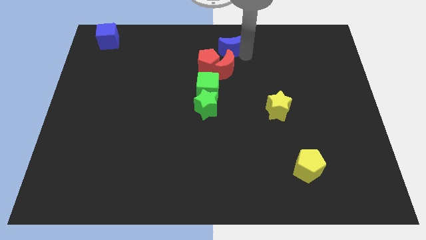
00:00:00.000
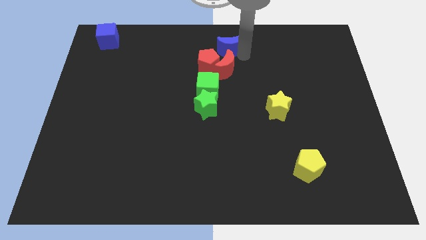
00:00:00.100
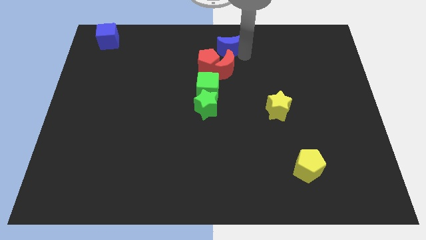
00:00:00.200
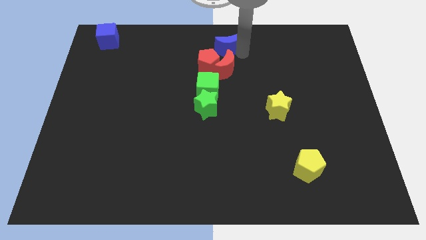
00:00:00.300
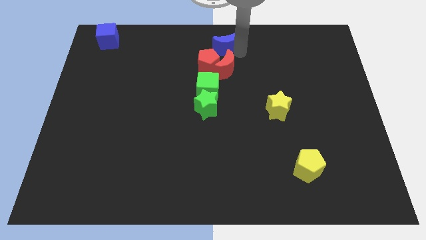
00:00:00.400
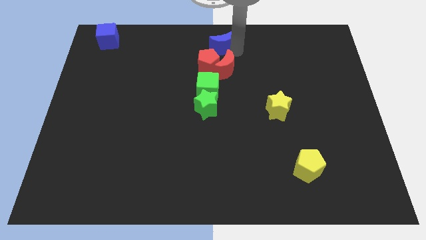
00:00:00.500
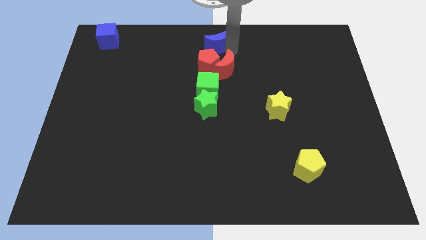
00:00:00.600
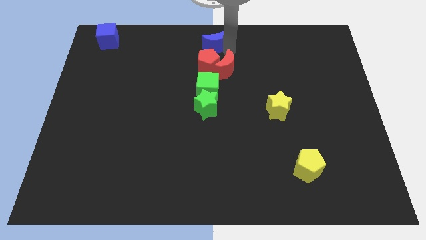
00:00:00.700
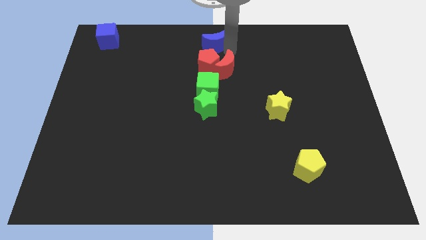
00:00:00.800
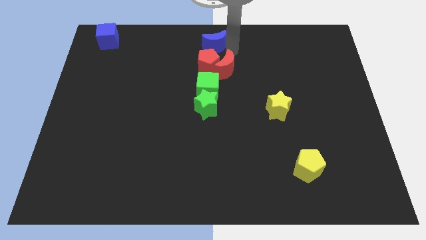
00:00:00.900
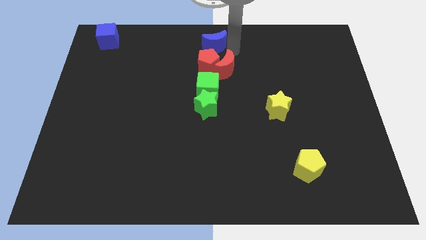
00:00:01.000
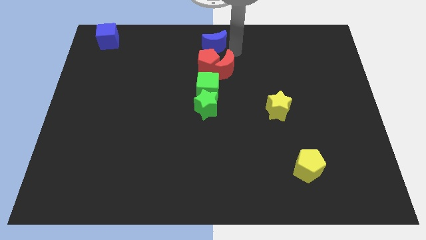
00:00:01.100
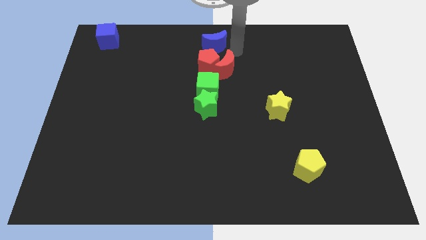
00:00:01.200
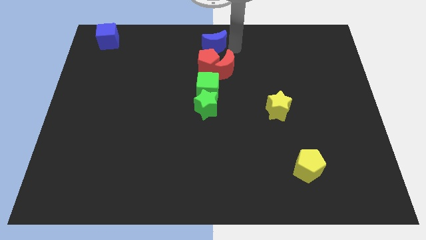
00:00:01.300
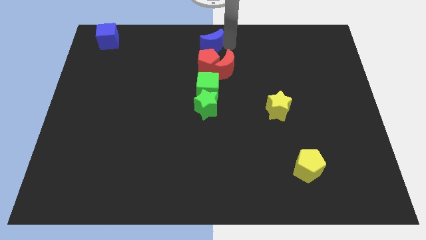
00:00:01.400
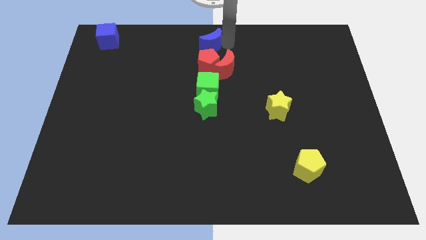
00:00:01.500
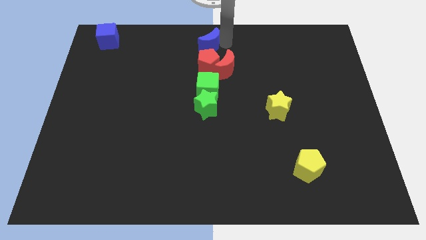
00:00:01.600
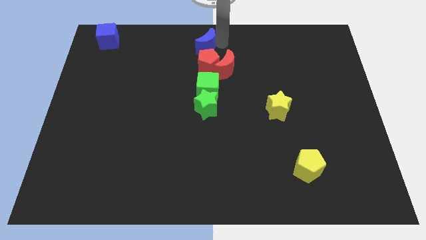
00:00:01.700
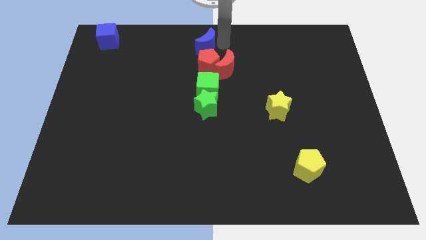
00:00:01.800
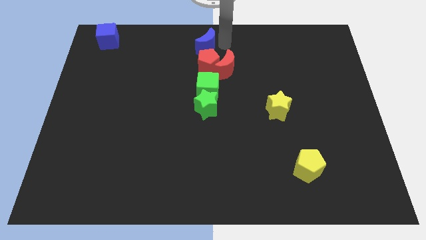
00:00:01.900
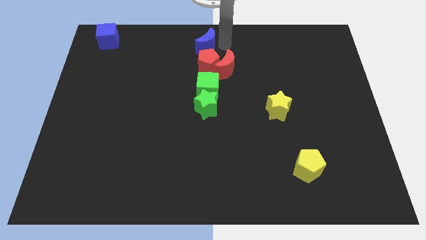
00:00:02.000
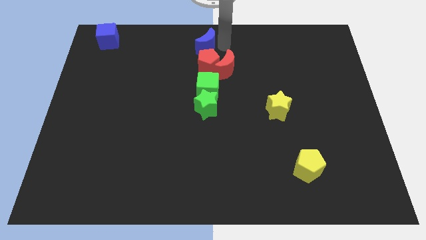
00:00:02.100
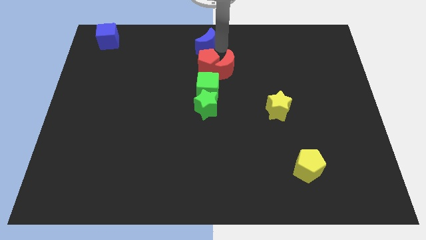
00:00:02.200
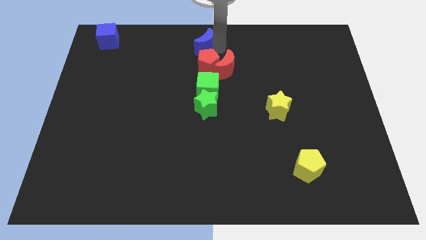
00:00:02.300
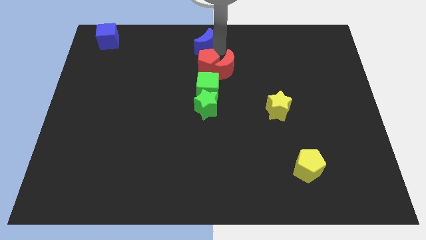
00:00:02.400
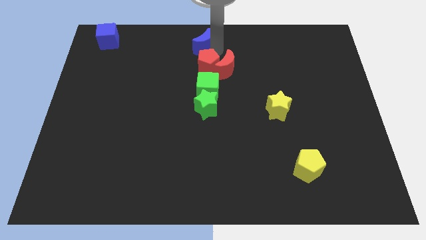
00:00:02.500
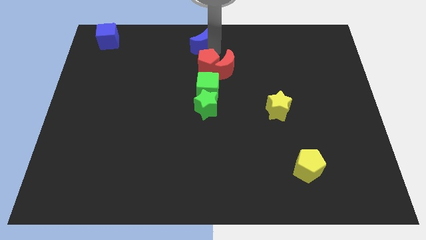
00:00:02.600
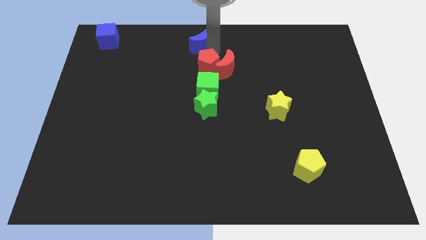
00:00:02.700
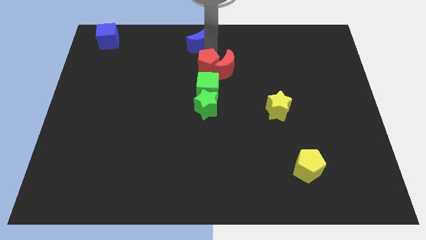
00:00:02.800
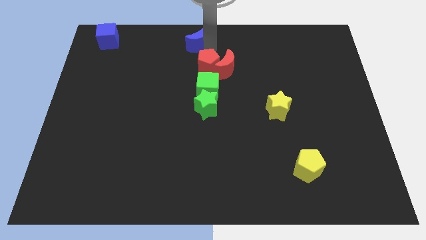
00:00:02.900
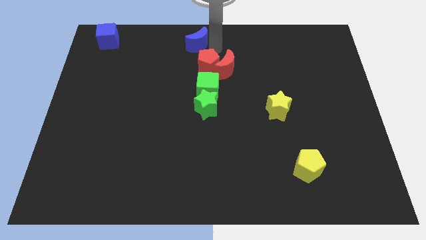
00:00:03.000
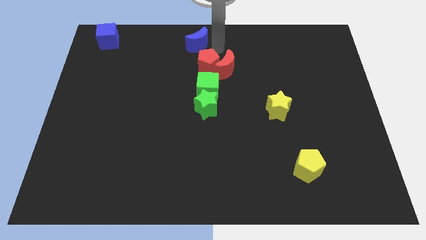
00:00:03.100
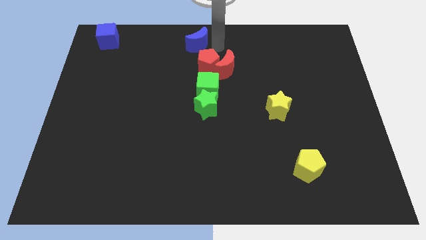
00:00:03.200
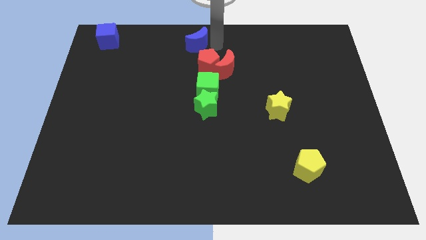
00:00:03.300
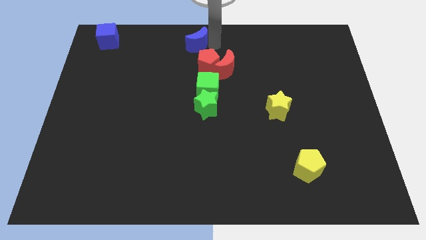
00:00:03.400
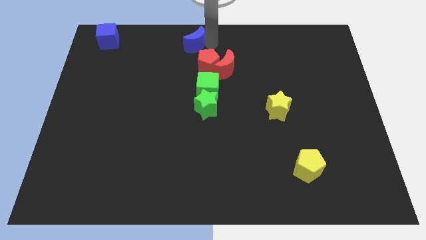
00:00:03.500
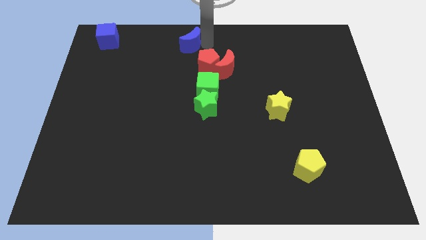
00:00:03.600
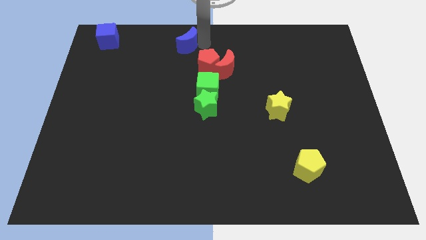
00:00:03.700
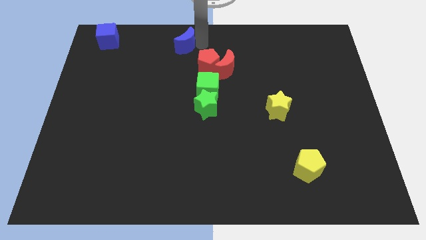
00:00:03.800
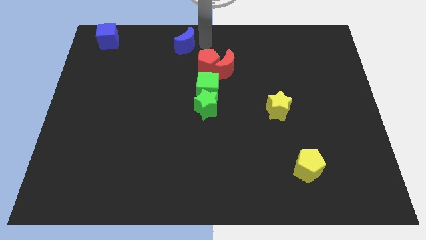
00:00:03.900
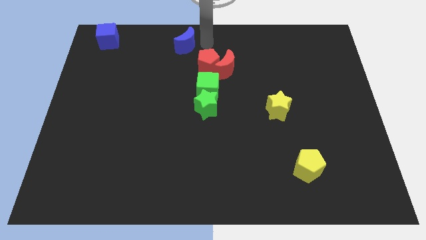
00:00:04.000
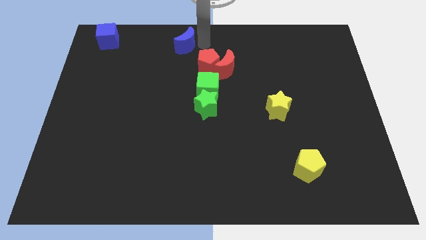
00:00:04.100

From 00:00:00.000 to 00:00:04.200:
move the blue crescent slightly towards the blue cube

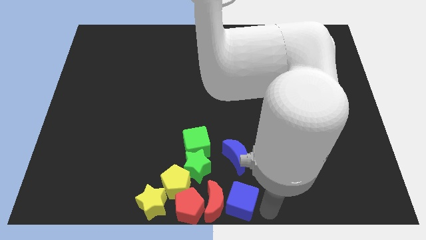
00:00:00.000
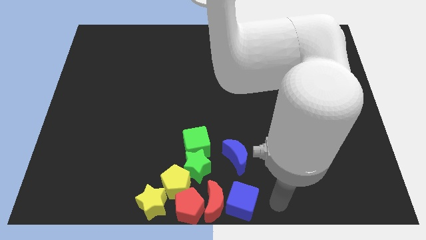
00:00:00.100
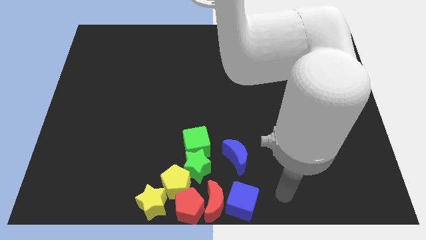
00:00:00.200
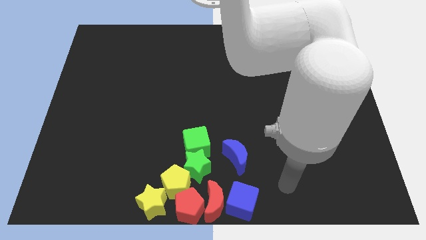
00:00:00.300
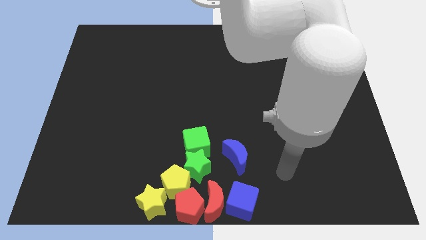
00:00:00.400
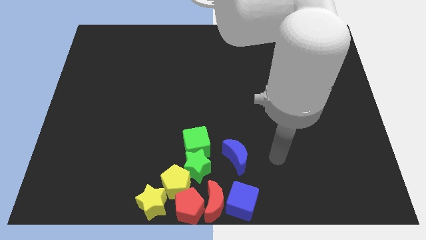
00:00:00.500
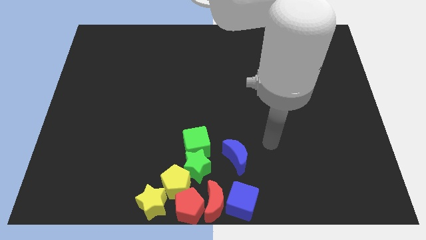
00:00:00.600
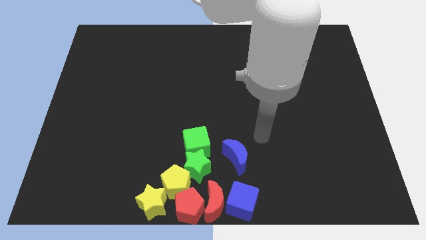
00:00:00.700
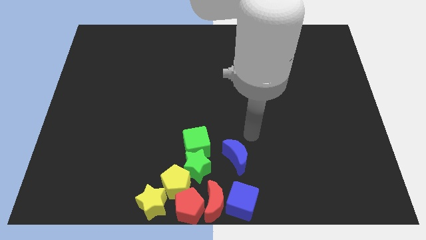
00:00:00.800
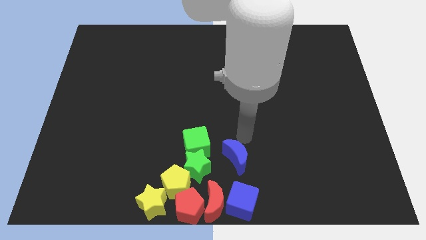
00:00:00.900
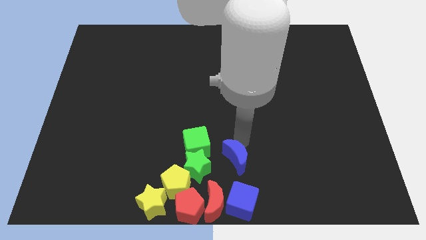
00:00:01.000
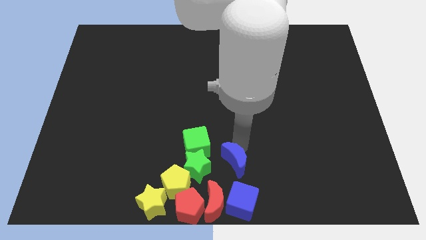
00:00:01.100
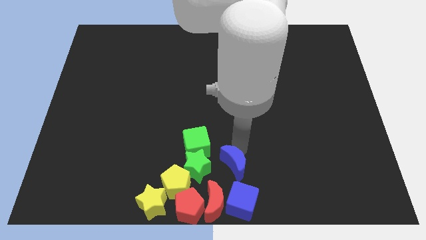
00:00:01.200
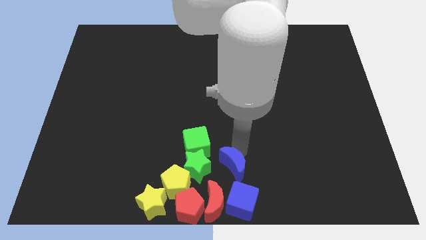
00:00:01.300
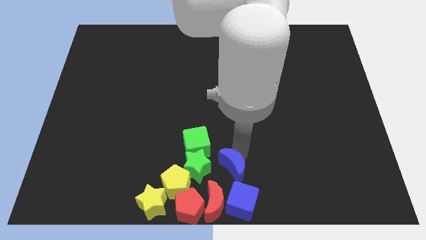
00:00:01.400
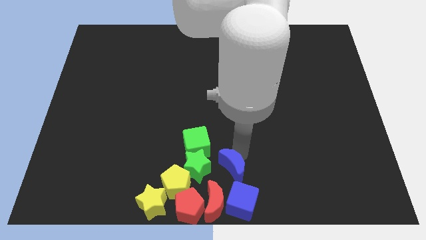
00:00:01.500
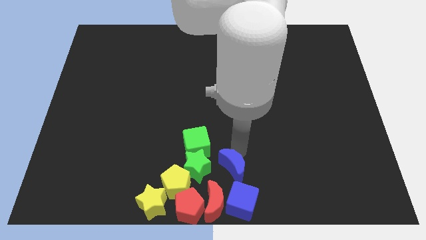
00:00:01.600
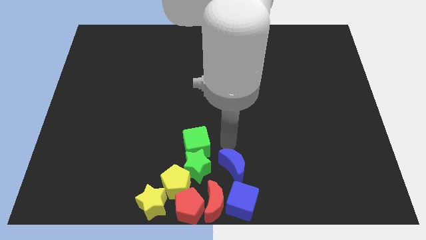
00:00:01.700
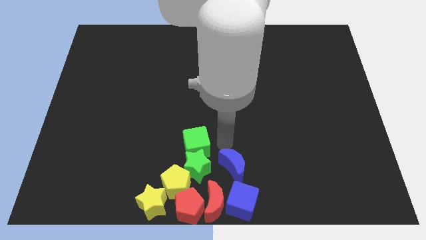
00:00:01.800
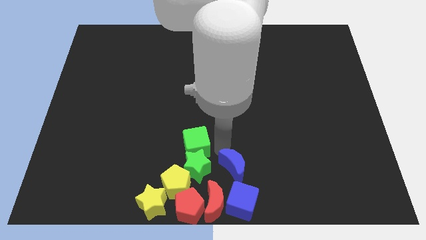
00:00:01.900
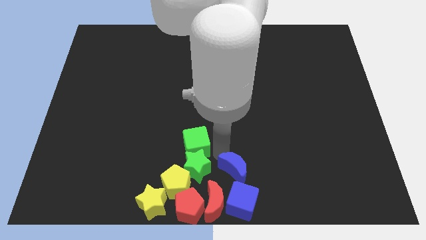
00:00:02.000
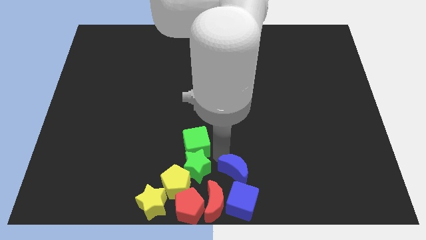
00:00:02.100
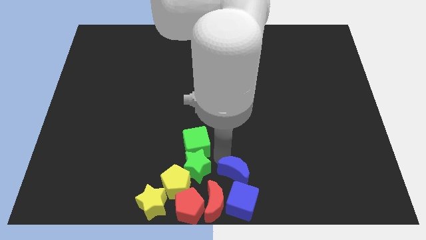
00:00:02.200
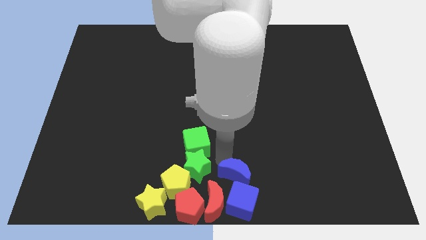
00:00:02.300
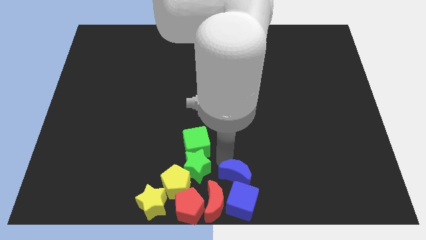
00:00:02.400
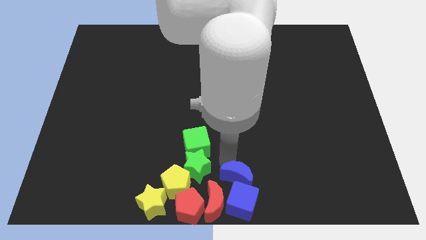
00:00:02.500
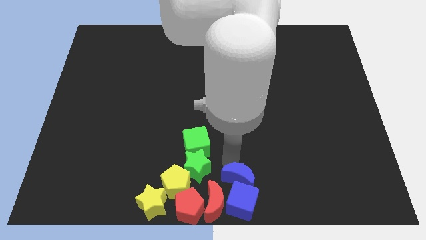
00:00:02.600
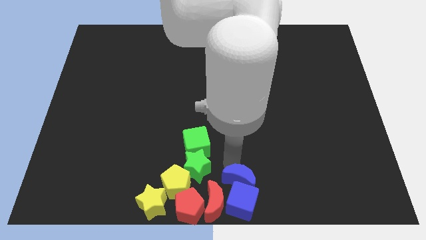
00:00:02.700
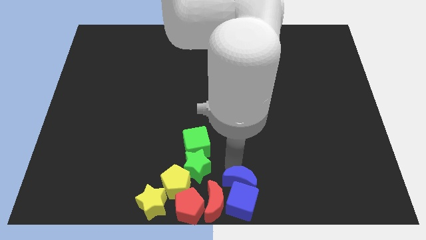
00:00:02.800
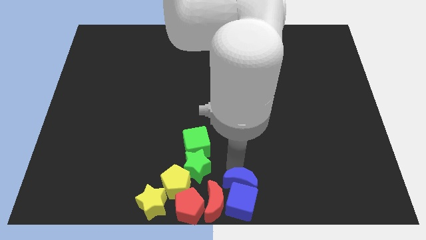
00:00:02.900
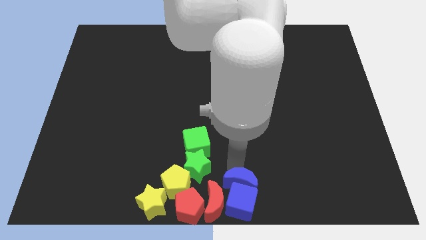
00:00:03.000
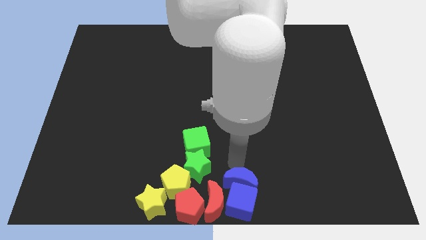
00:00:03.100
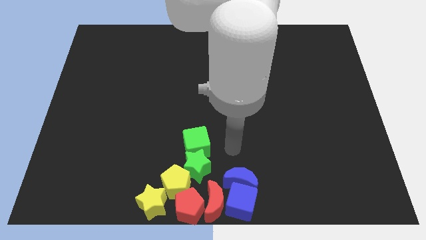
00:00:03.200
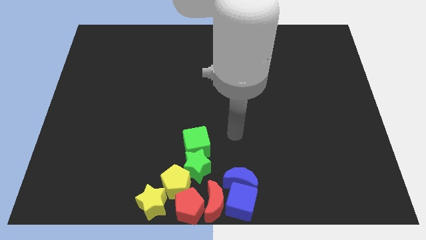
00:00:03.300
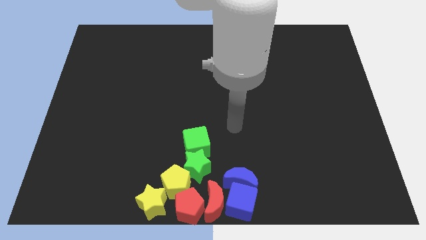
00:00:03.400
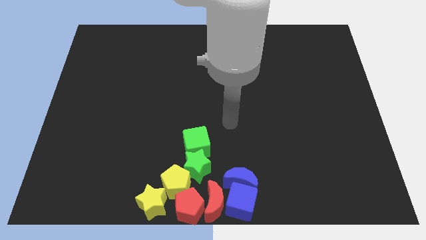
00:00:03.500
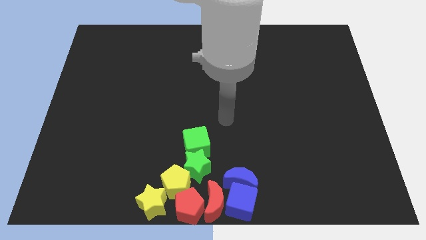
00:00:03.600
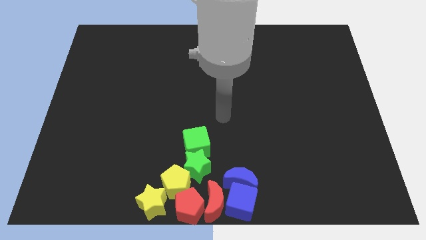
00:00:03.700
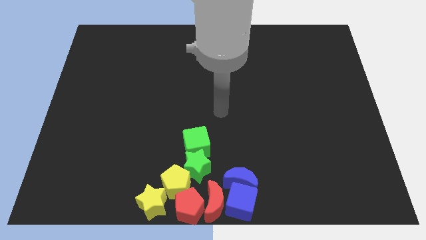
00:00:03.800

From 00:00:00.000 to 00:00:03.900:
move the blue moon above the blue cube

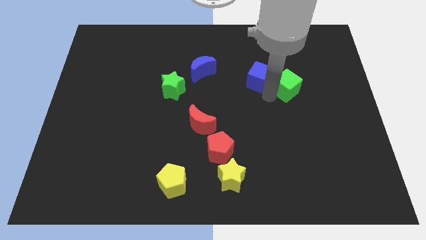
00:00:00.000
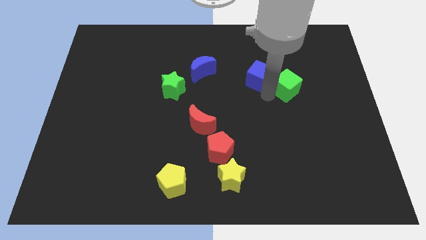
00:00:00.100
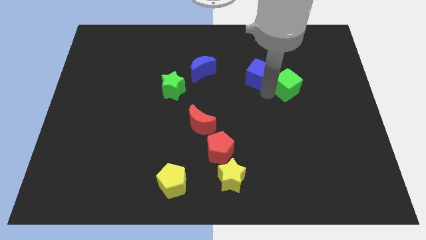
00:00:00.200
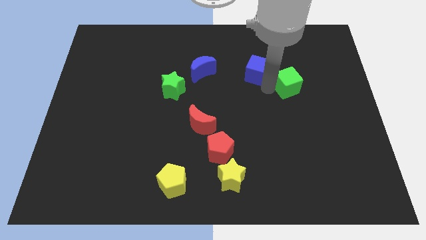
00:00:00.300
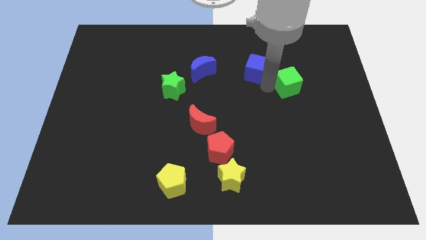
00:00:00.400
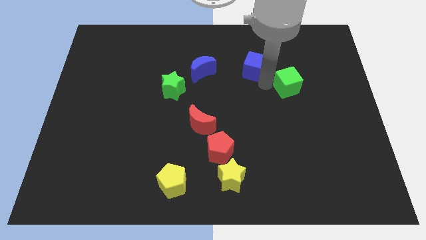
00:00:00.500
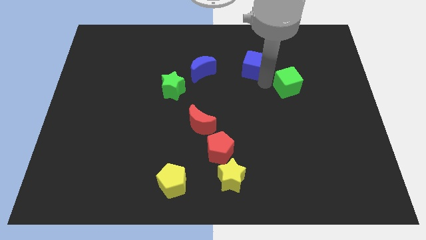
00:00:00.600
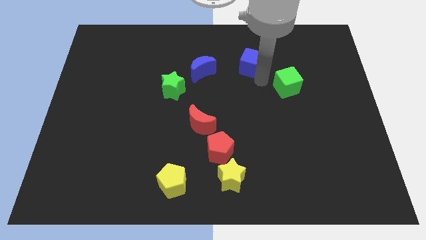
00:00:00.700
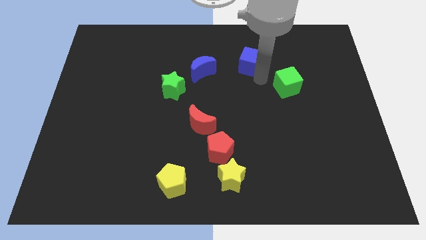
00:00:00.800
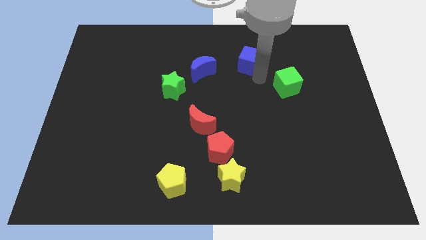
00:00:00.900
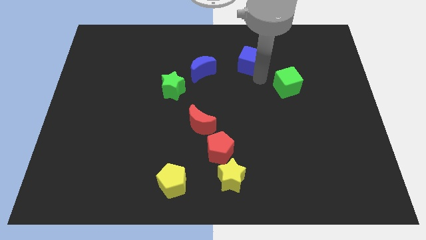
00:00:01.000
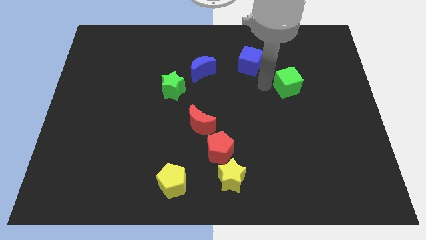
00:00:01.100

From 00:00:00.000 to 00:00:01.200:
push the blue cube to the right of blue crescent
